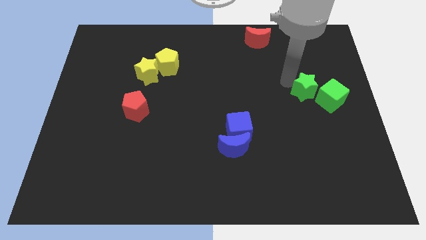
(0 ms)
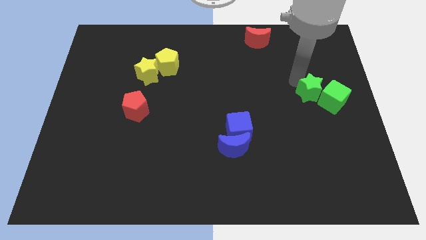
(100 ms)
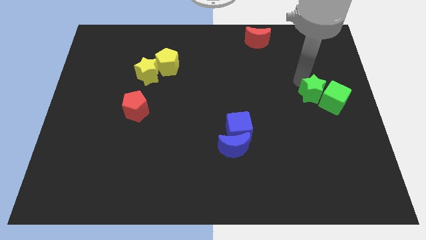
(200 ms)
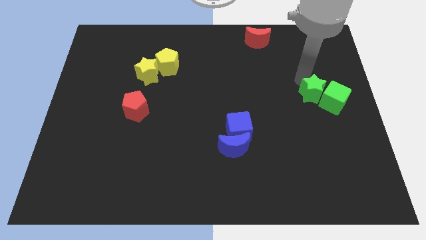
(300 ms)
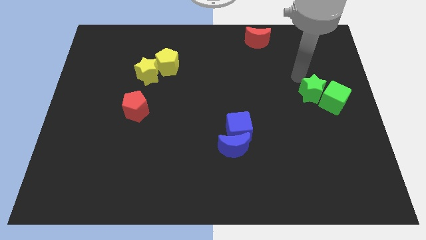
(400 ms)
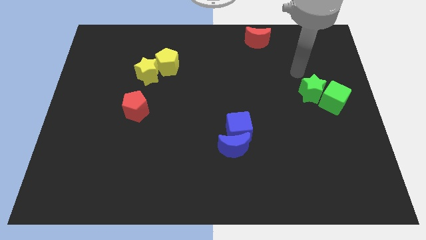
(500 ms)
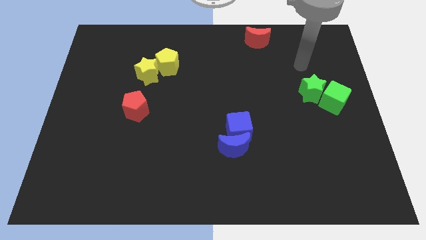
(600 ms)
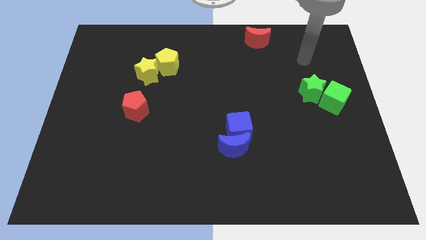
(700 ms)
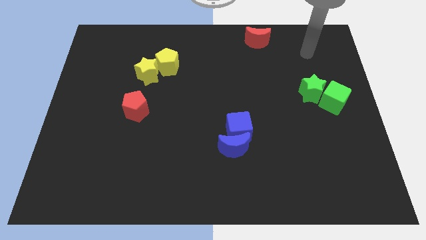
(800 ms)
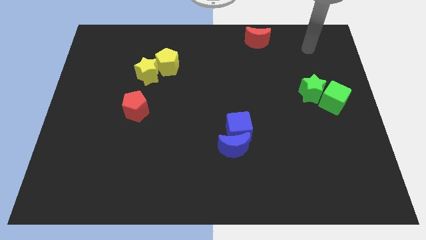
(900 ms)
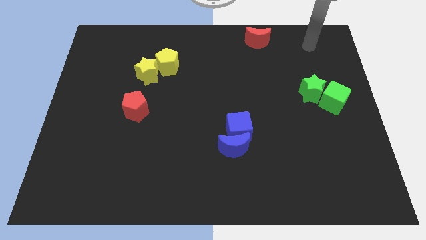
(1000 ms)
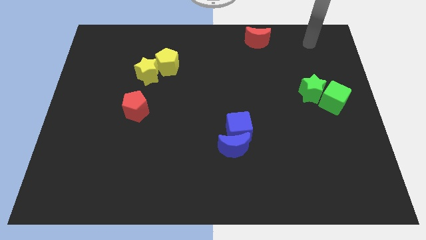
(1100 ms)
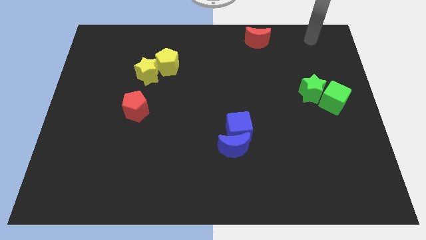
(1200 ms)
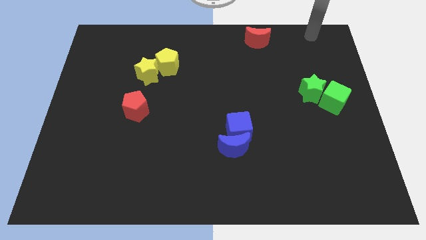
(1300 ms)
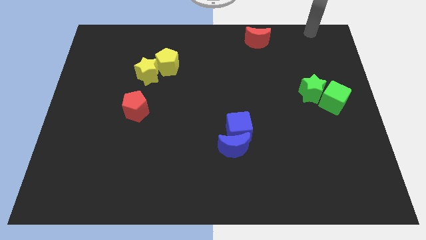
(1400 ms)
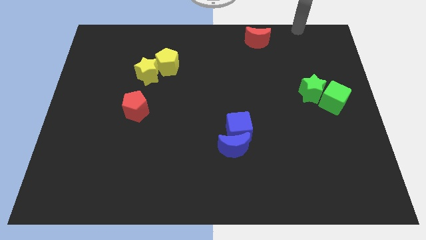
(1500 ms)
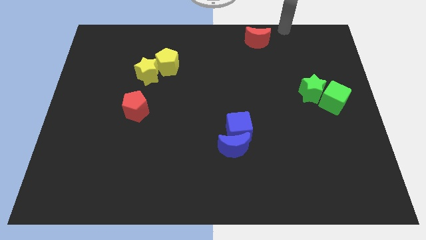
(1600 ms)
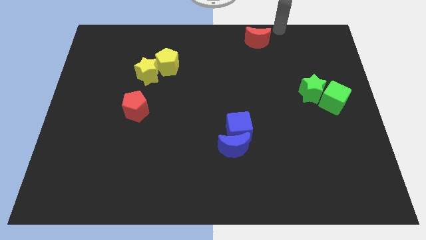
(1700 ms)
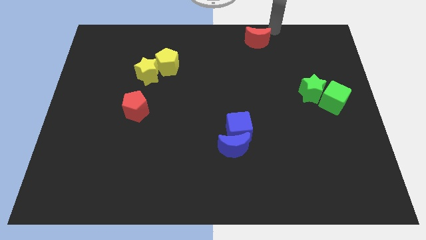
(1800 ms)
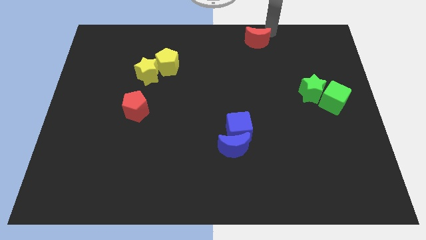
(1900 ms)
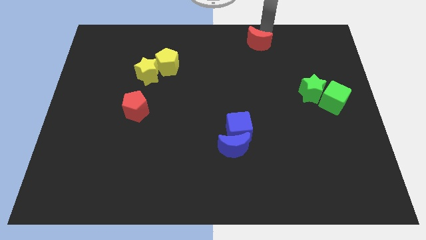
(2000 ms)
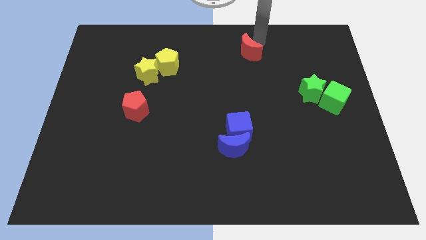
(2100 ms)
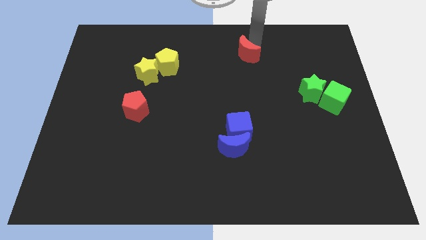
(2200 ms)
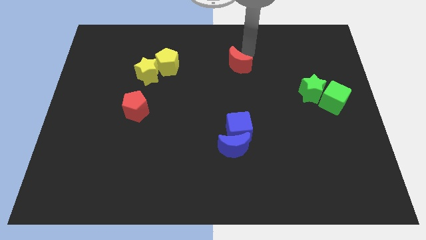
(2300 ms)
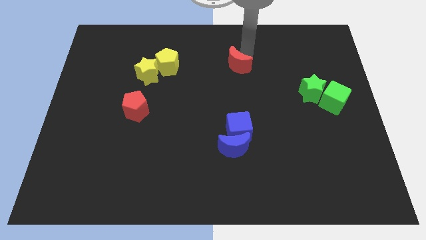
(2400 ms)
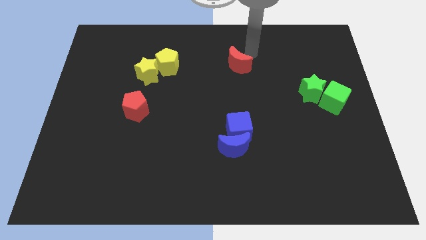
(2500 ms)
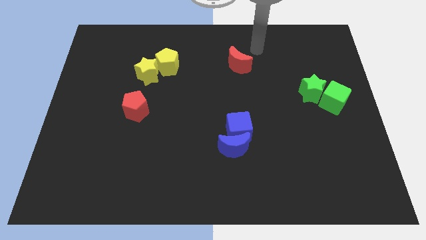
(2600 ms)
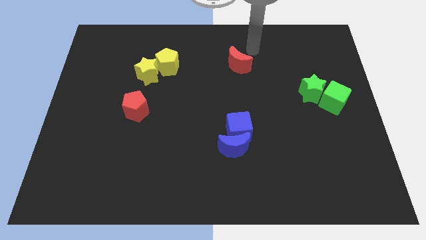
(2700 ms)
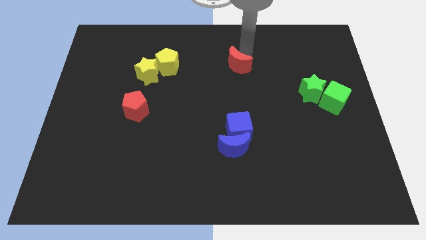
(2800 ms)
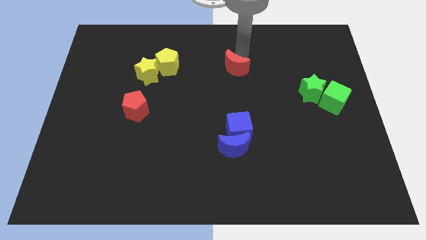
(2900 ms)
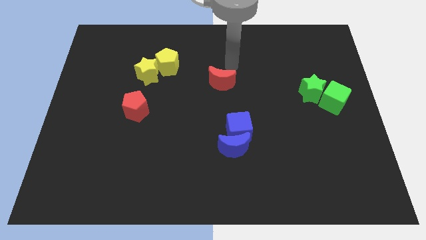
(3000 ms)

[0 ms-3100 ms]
place the red moon to the center

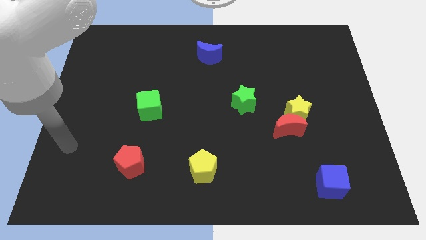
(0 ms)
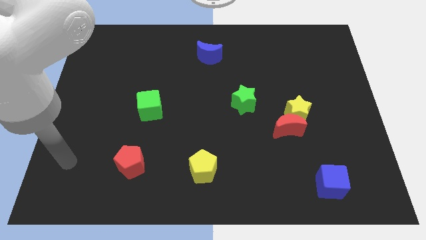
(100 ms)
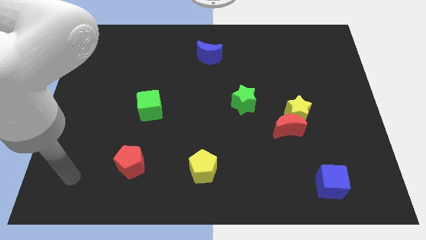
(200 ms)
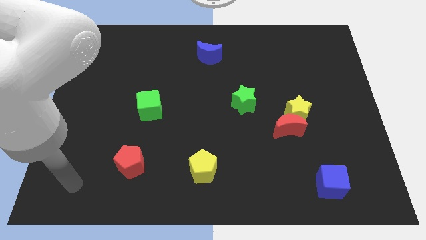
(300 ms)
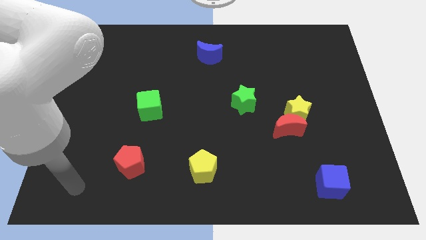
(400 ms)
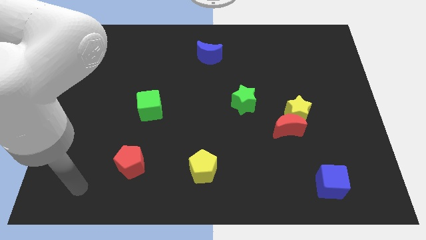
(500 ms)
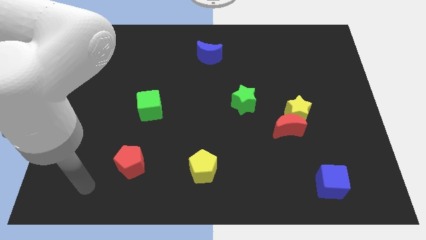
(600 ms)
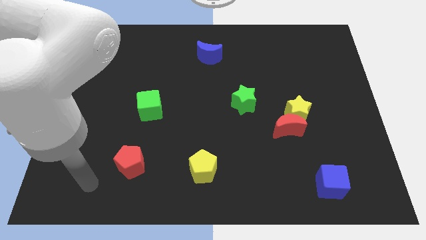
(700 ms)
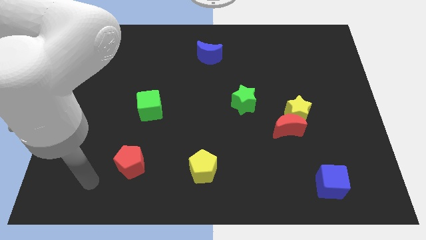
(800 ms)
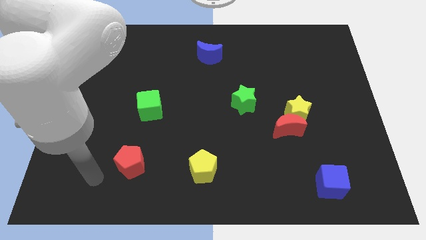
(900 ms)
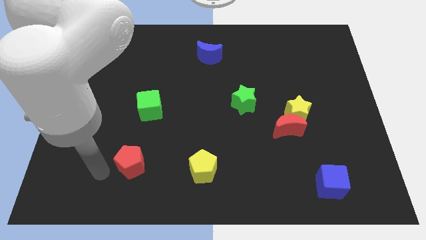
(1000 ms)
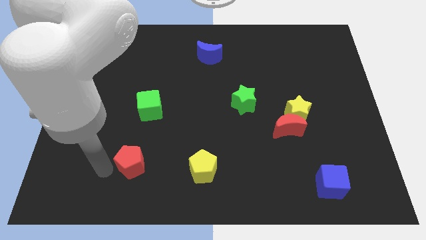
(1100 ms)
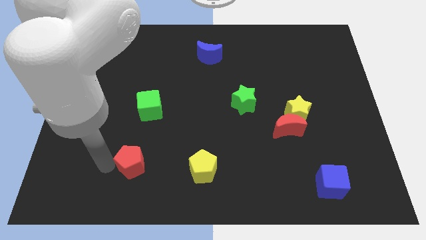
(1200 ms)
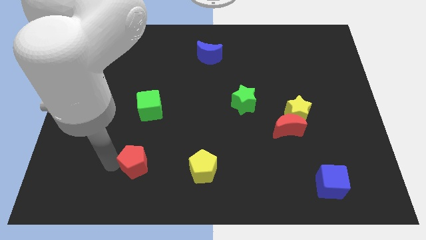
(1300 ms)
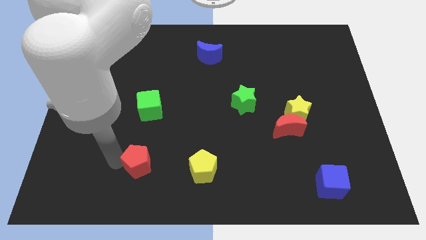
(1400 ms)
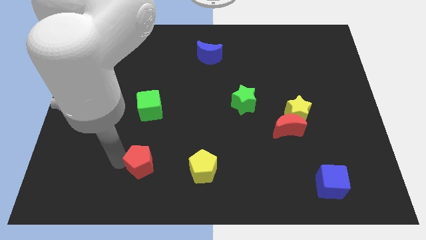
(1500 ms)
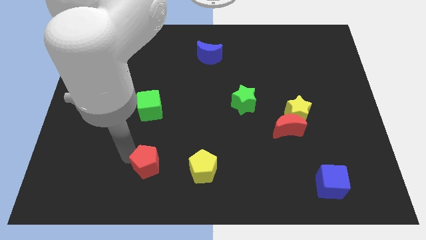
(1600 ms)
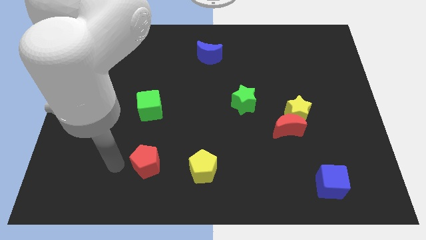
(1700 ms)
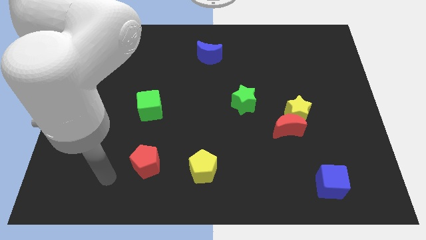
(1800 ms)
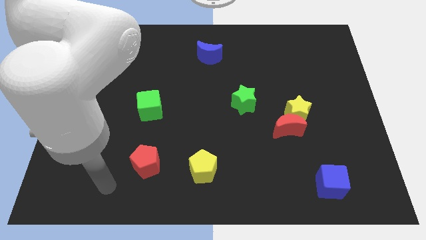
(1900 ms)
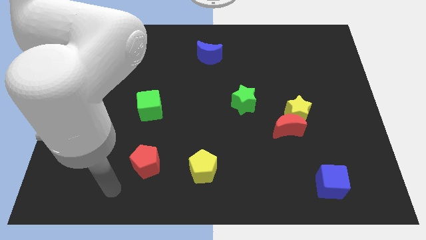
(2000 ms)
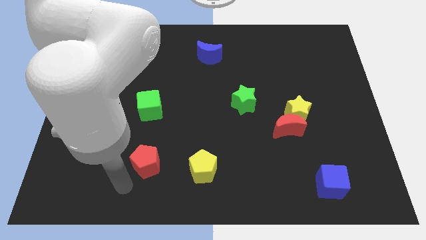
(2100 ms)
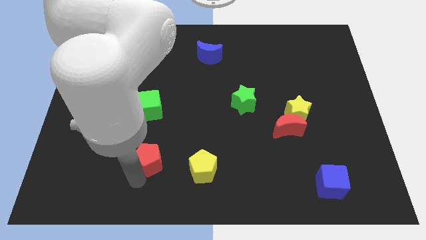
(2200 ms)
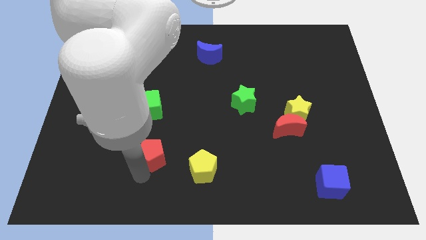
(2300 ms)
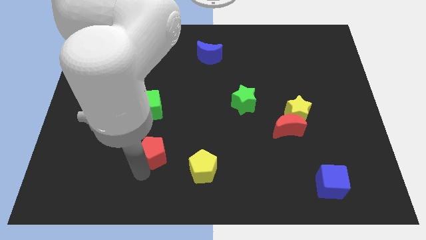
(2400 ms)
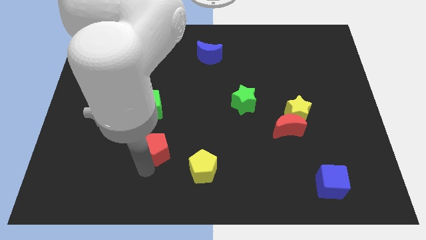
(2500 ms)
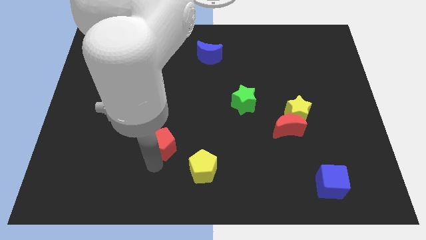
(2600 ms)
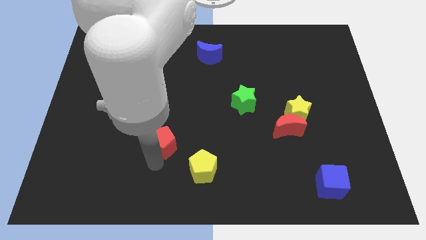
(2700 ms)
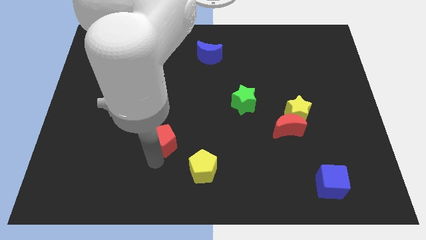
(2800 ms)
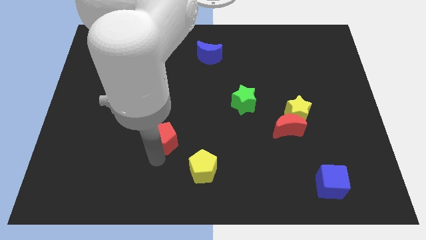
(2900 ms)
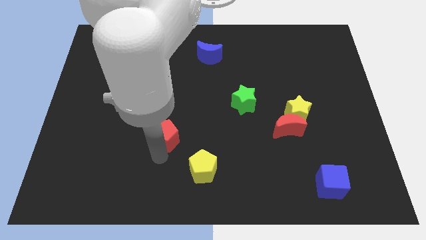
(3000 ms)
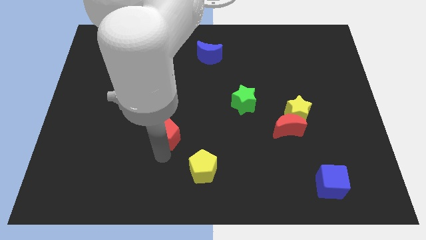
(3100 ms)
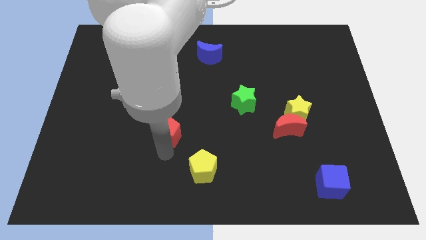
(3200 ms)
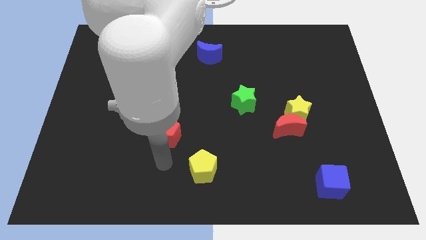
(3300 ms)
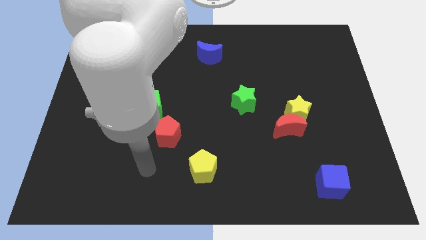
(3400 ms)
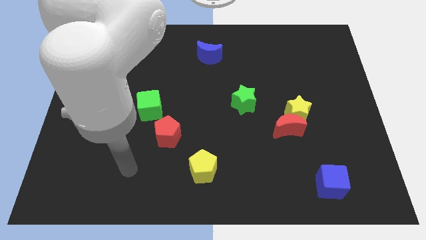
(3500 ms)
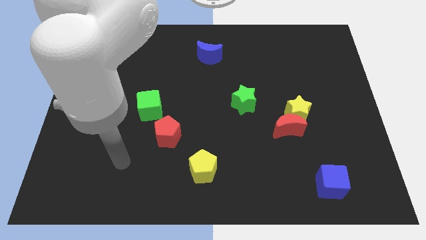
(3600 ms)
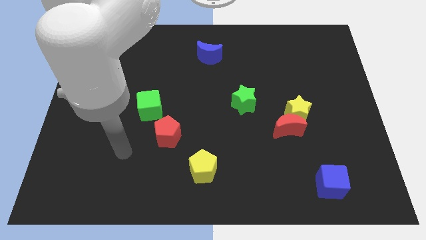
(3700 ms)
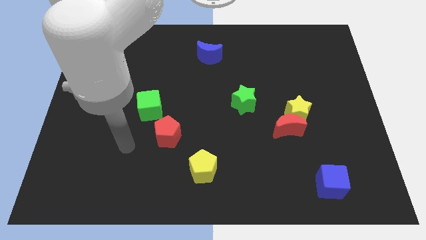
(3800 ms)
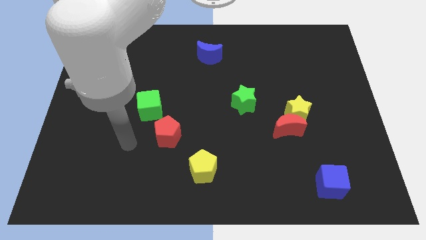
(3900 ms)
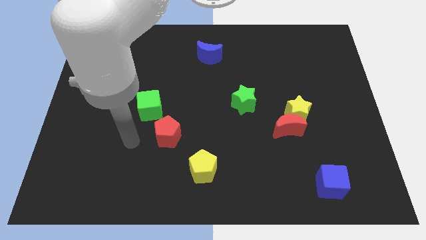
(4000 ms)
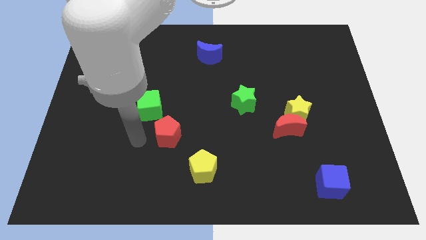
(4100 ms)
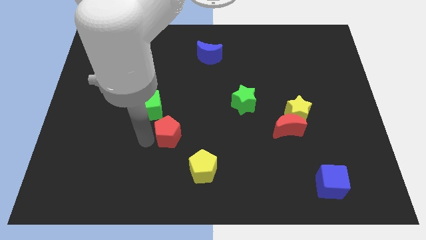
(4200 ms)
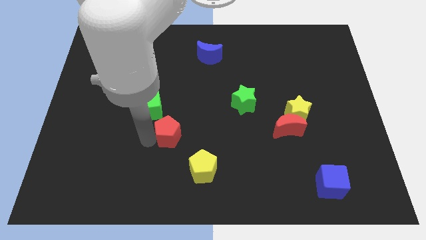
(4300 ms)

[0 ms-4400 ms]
place the red pentagon in between yellow pentagon and green block

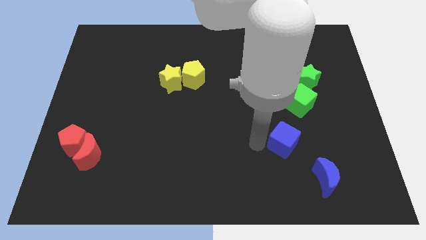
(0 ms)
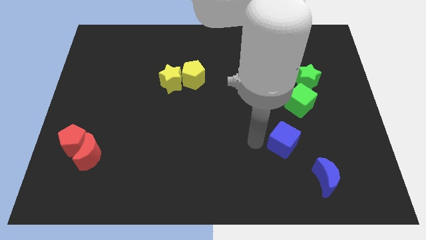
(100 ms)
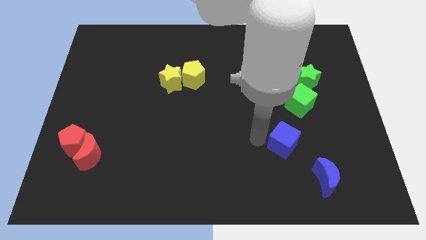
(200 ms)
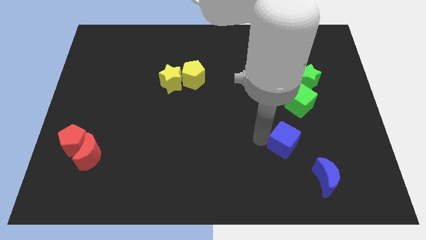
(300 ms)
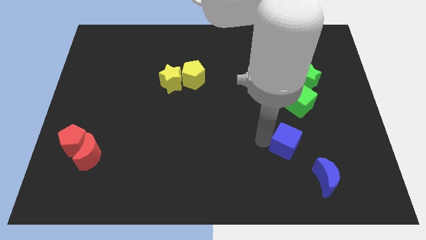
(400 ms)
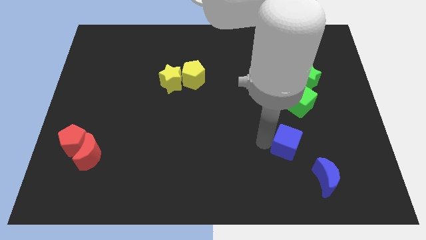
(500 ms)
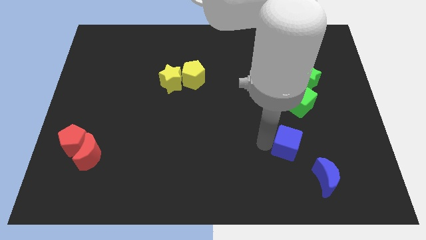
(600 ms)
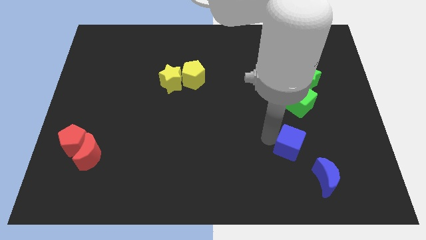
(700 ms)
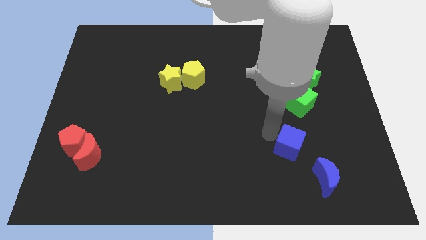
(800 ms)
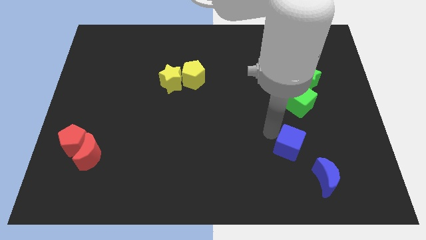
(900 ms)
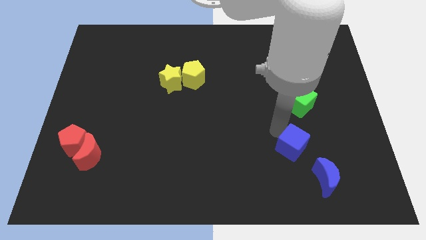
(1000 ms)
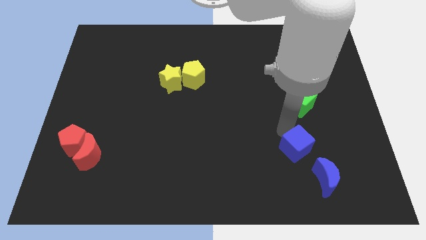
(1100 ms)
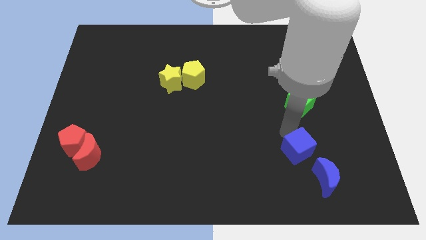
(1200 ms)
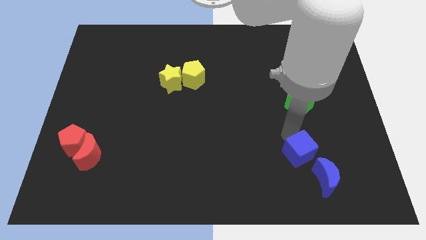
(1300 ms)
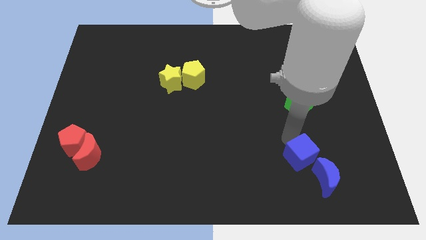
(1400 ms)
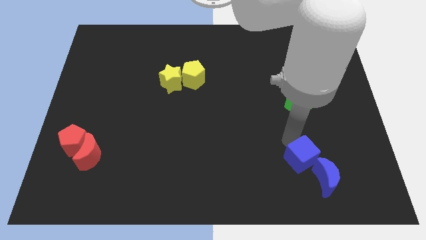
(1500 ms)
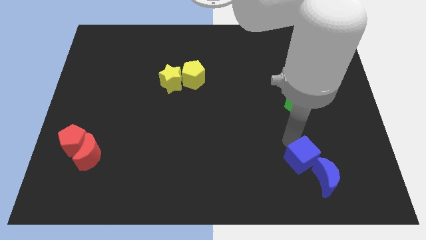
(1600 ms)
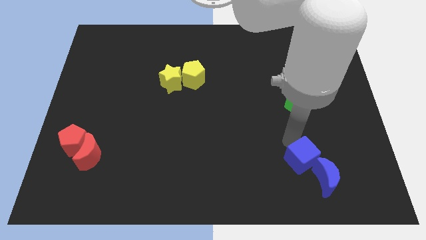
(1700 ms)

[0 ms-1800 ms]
put the blue cube vertically below the green cube
